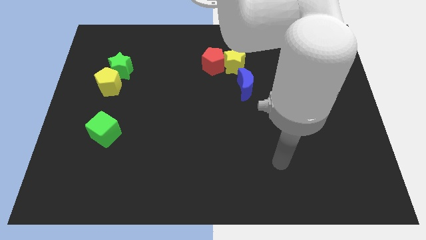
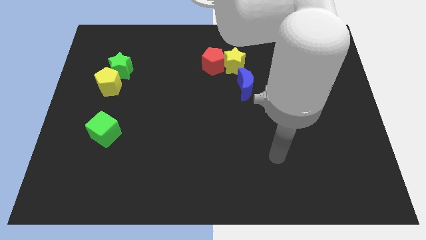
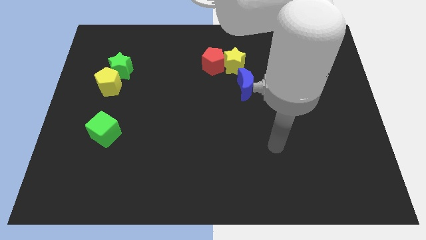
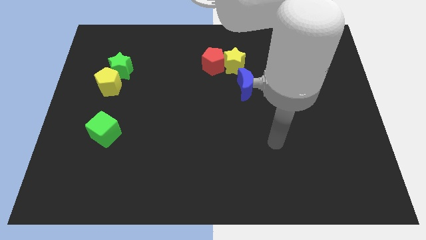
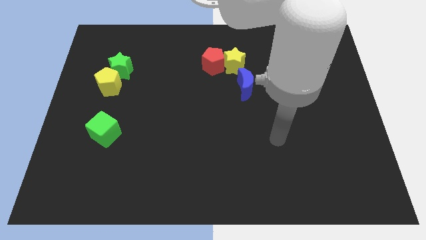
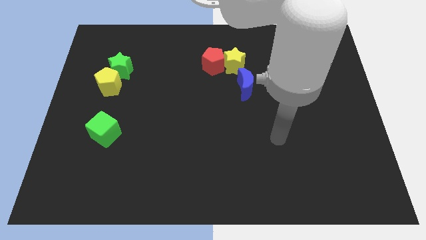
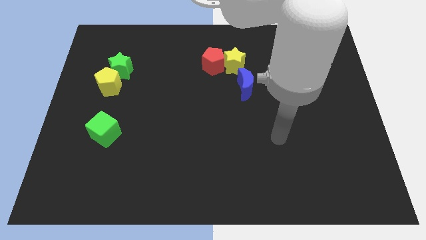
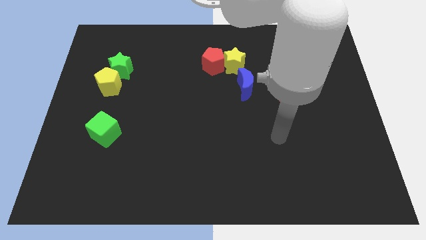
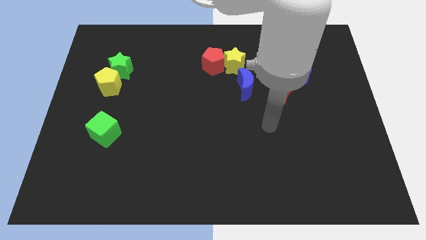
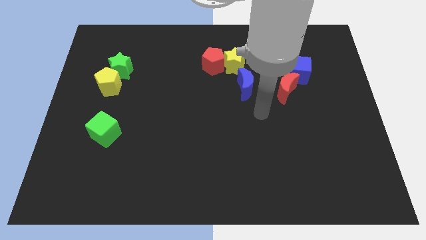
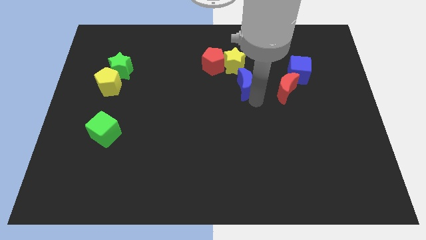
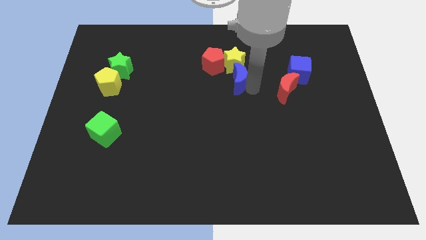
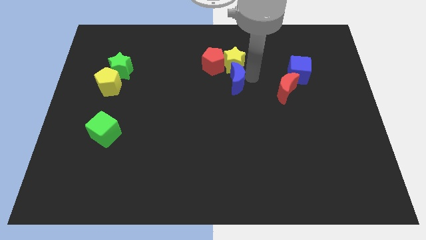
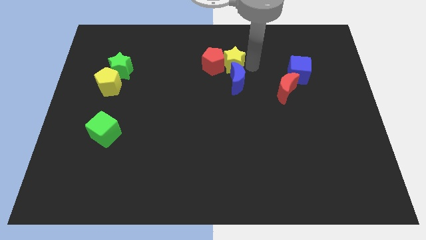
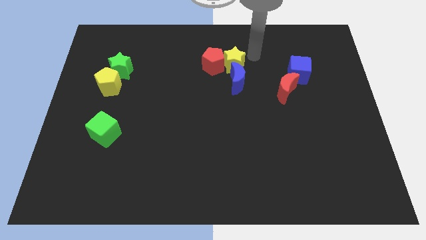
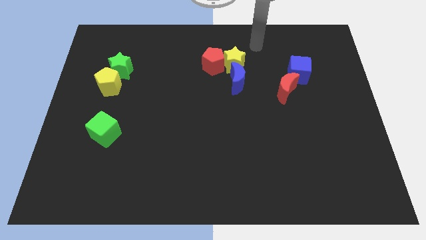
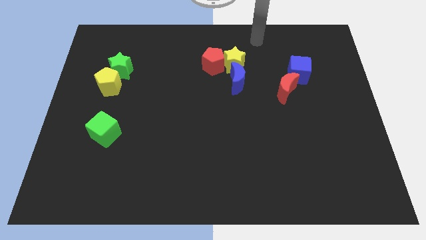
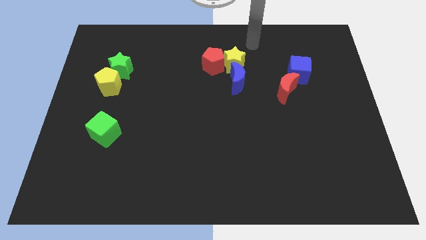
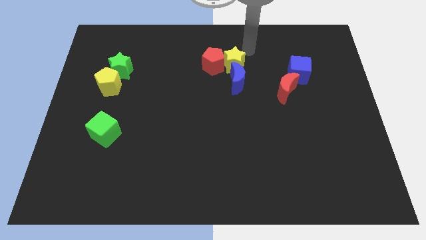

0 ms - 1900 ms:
place your arm towards right side of yellow star

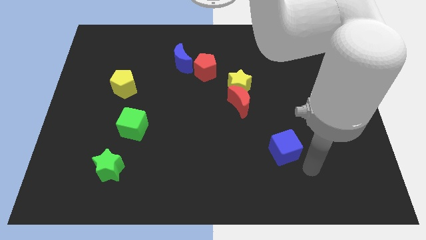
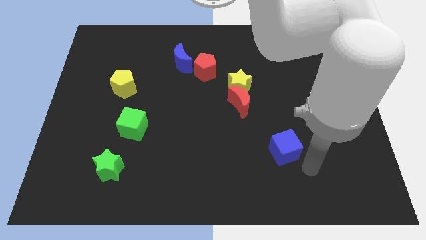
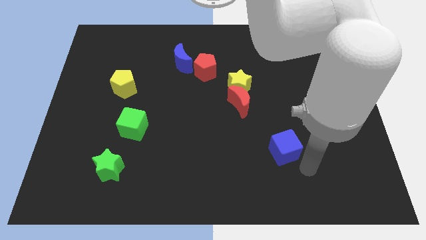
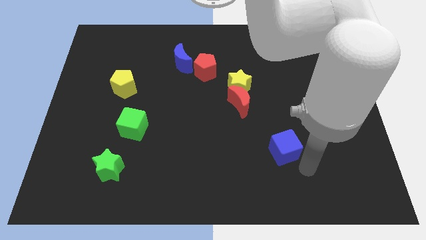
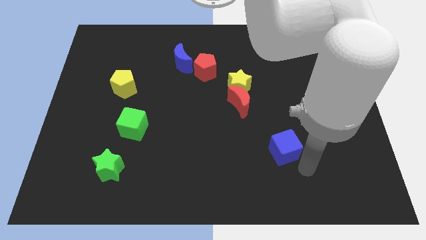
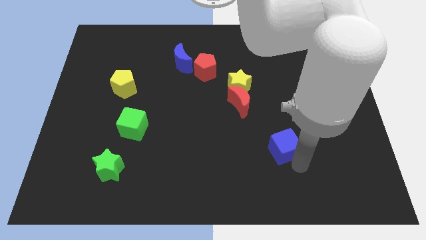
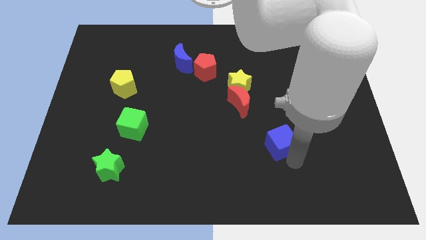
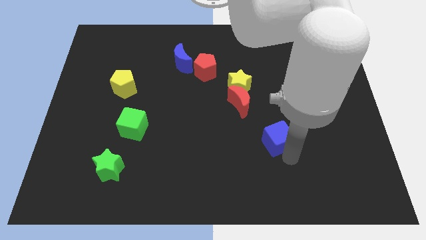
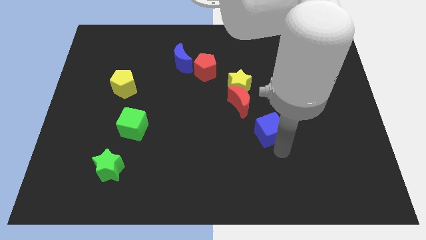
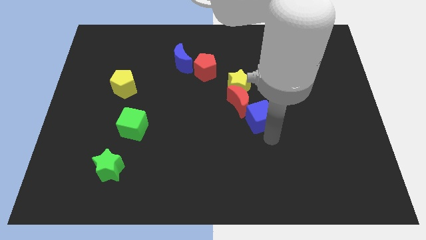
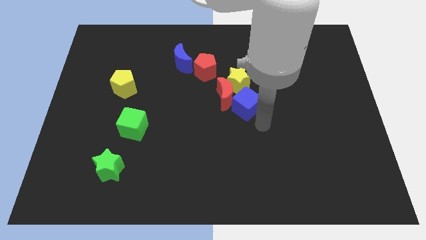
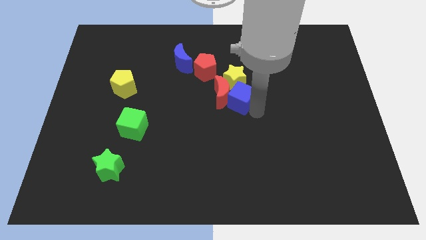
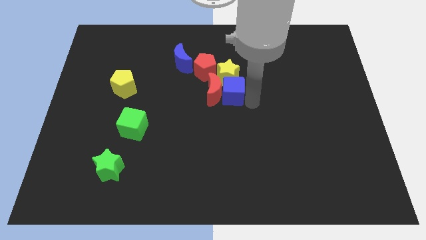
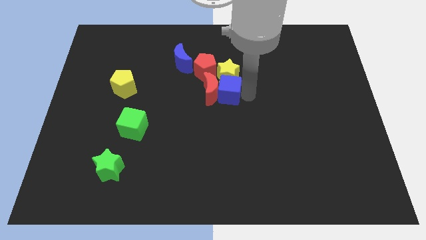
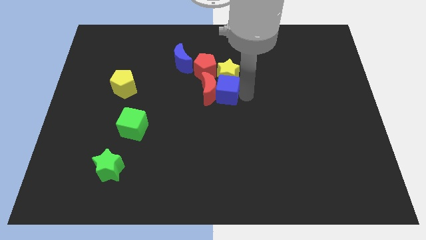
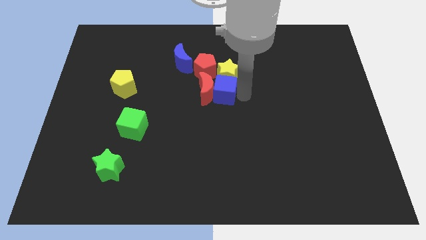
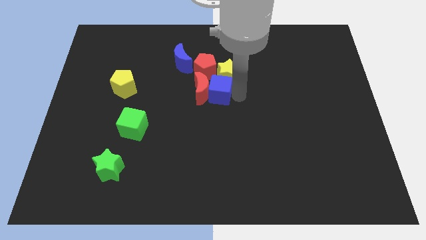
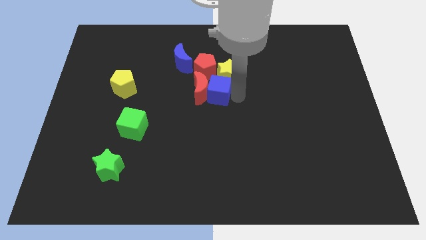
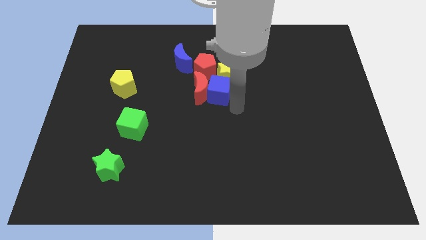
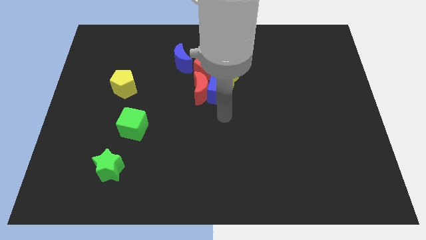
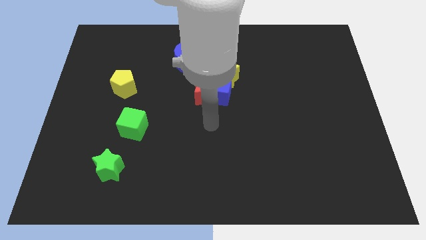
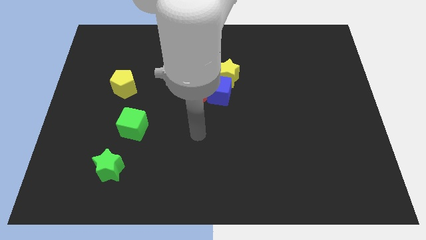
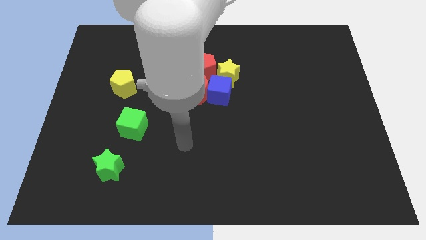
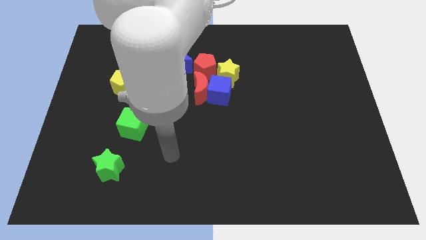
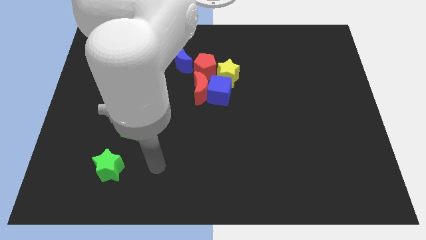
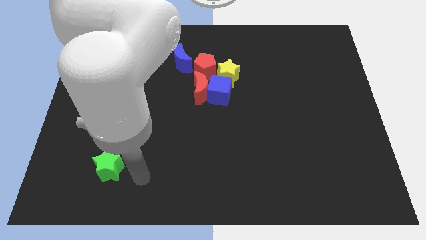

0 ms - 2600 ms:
push blue cube into group of blocks

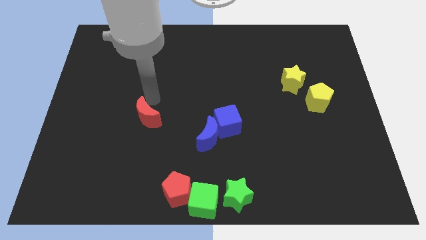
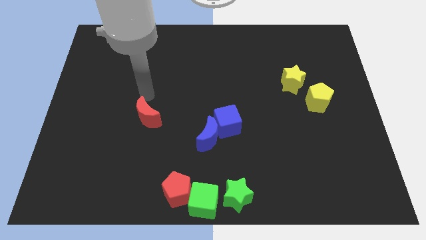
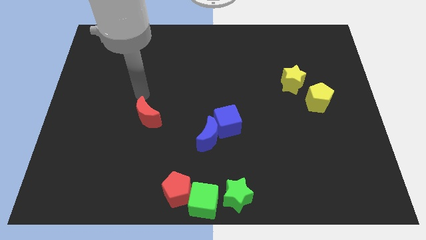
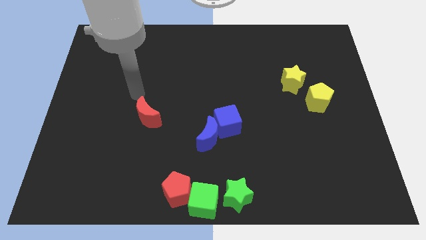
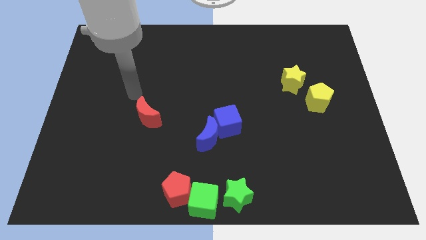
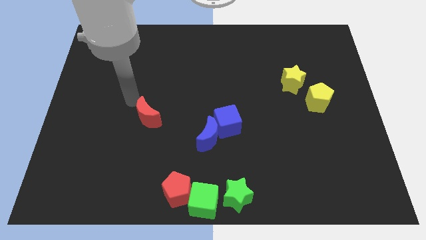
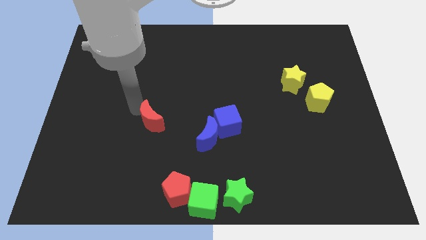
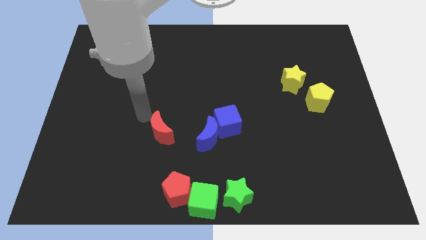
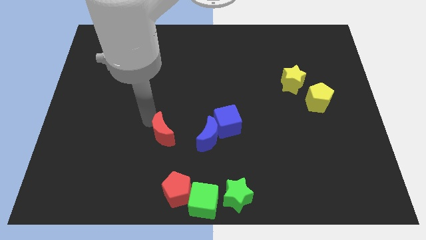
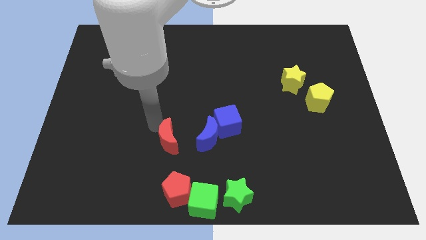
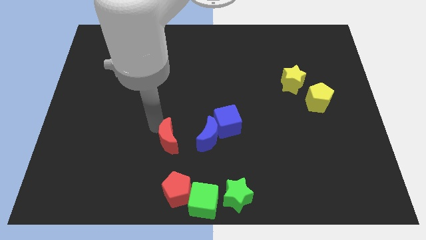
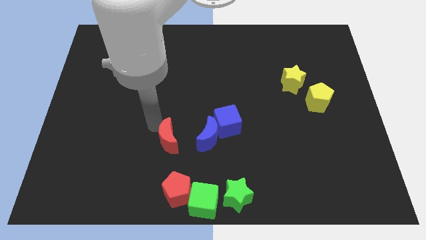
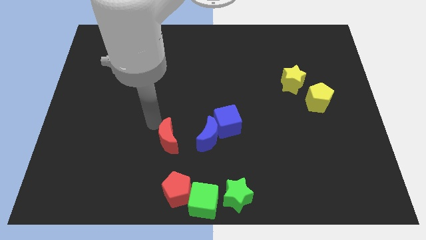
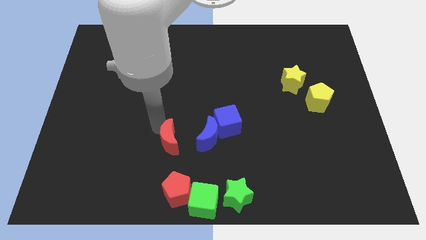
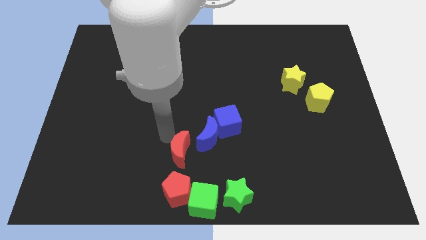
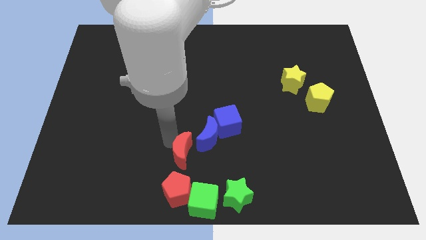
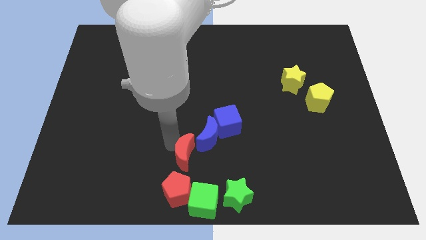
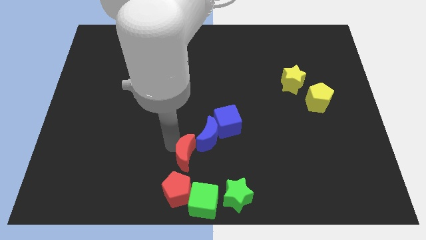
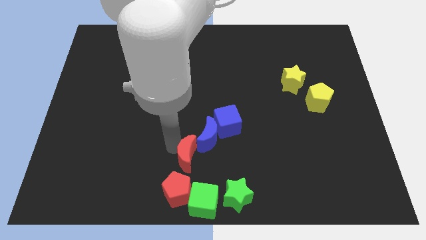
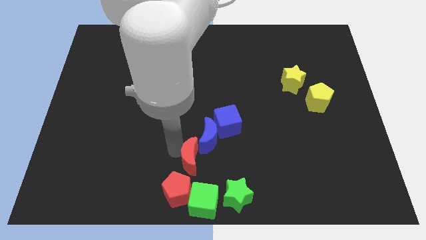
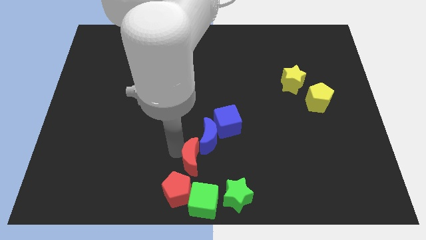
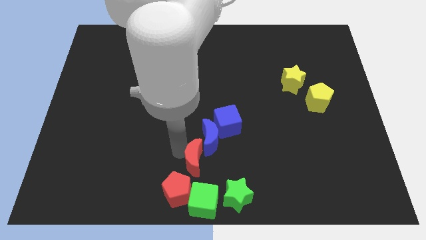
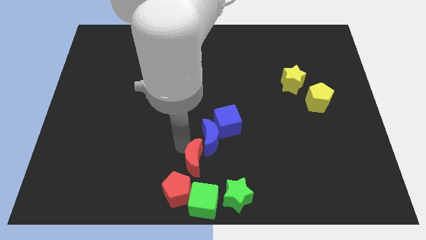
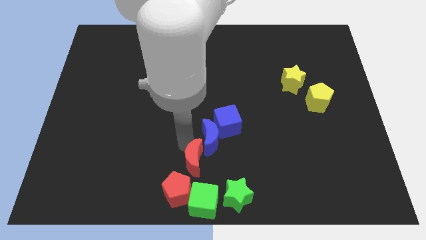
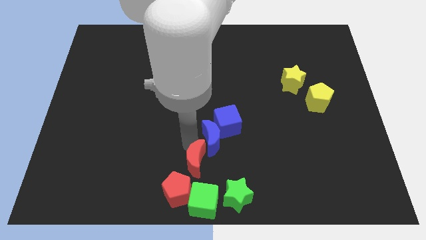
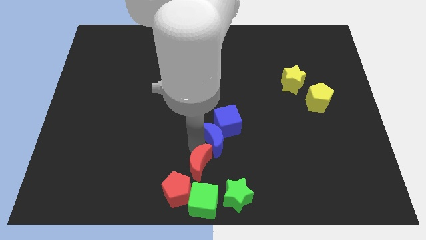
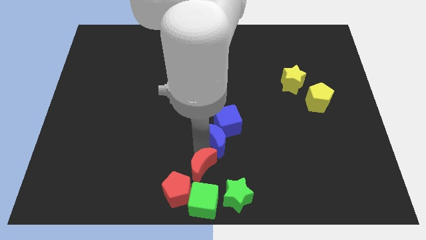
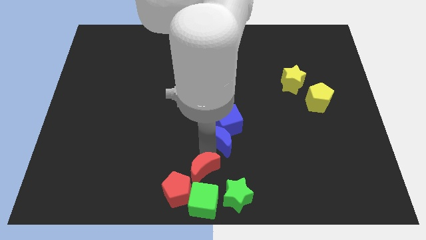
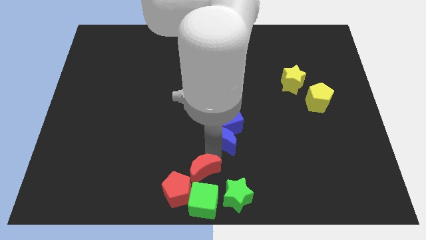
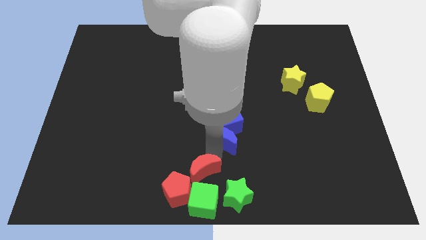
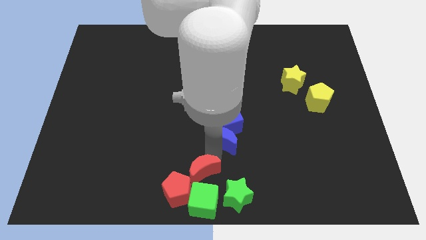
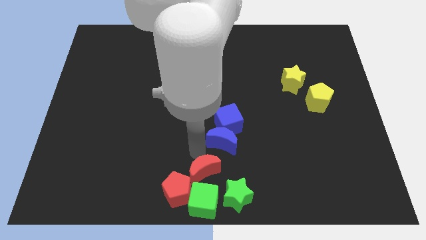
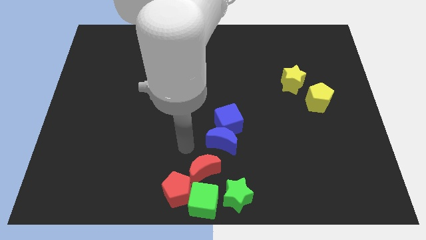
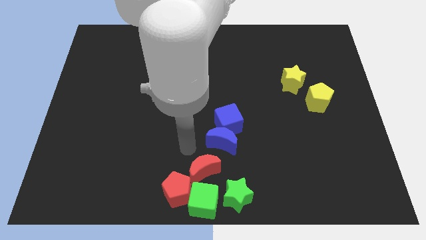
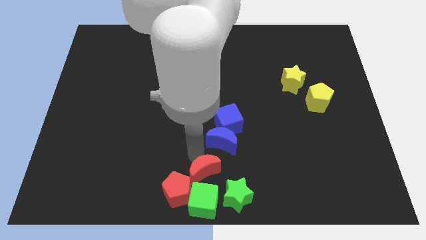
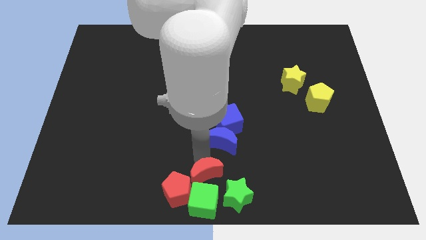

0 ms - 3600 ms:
move the red crescent to the top of the green cube

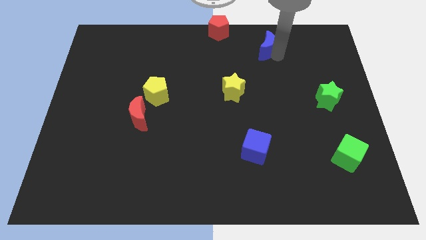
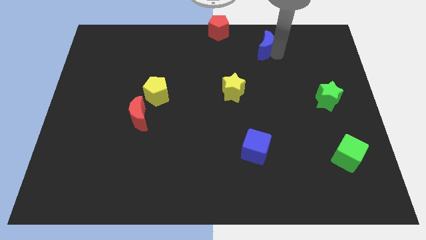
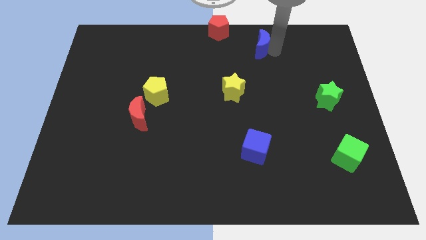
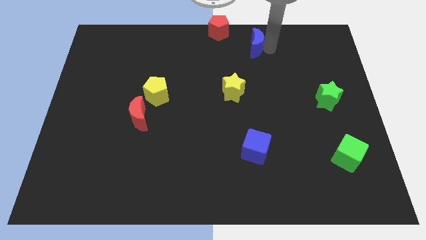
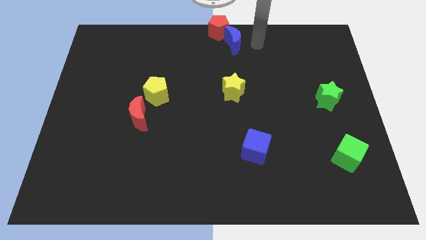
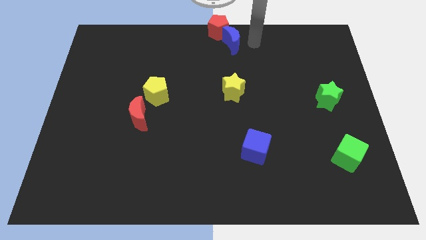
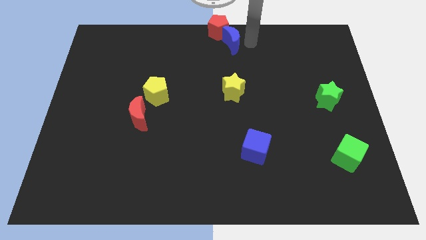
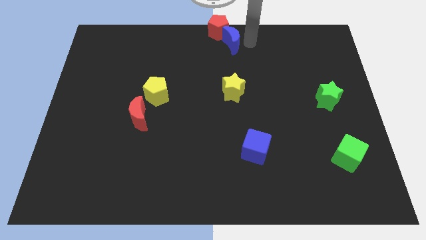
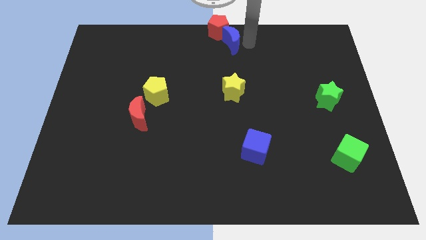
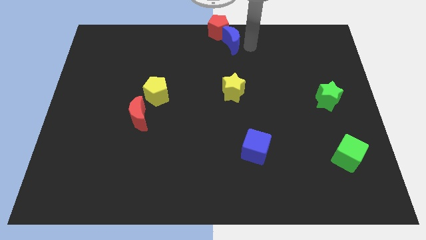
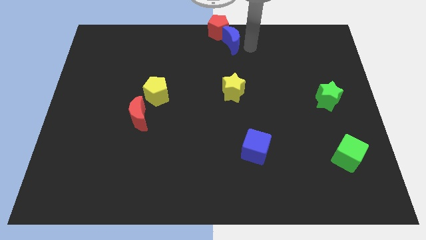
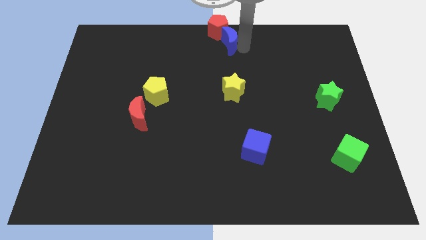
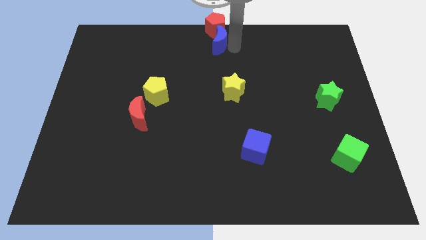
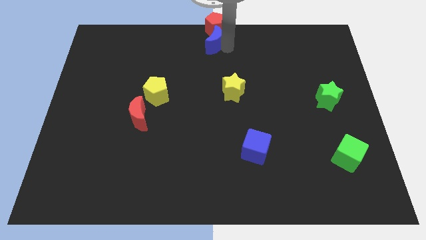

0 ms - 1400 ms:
put the blue moon to the bottom side of the red pentagon
